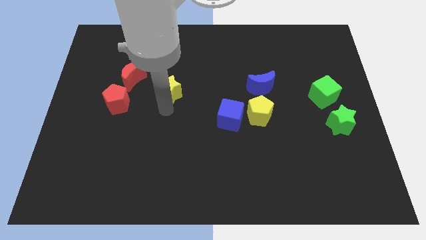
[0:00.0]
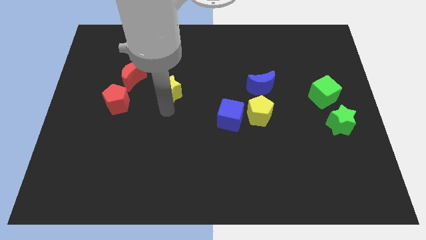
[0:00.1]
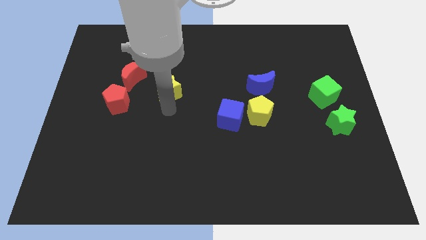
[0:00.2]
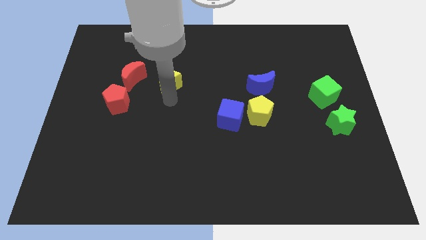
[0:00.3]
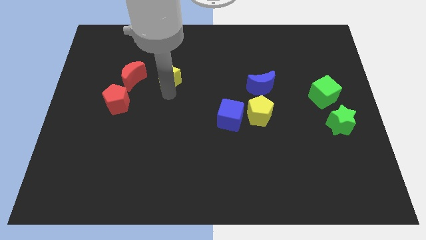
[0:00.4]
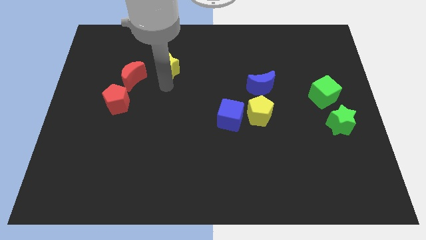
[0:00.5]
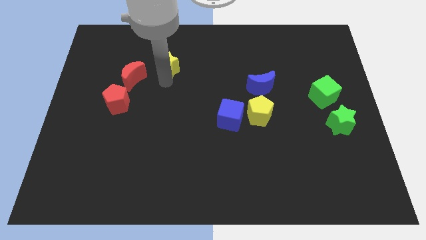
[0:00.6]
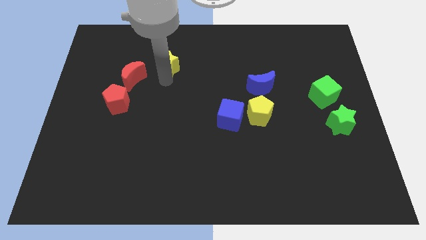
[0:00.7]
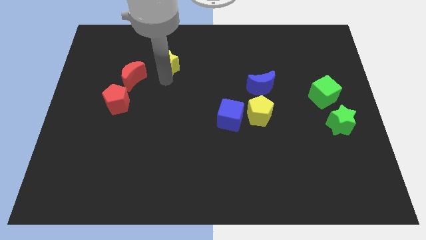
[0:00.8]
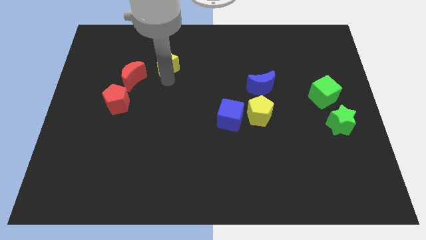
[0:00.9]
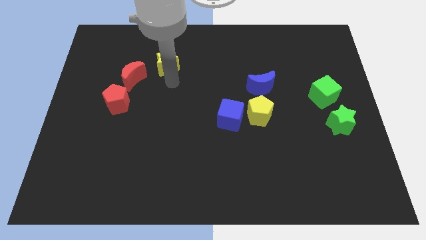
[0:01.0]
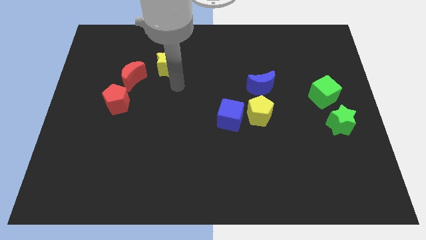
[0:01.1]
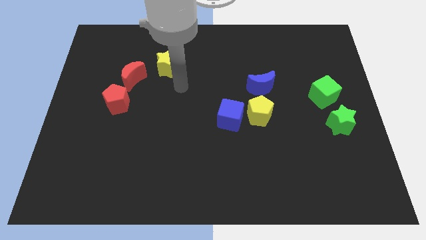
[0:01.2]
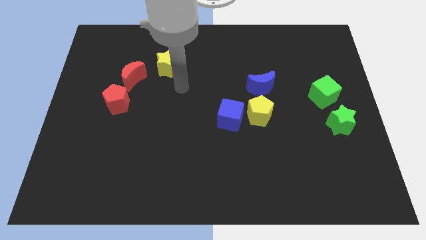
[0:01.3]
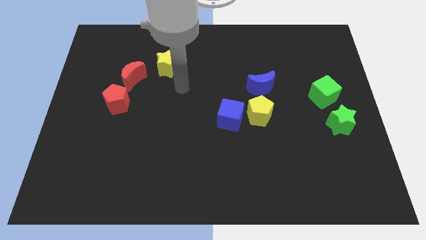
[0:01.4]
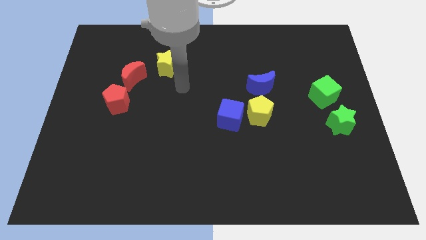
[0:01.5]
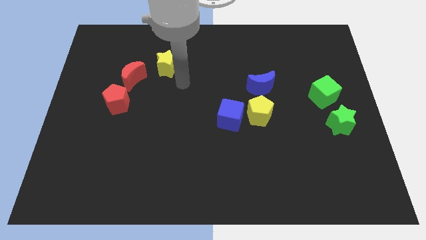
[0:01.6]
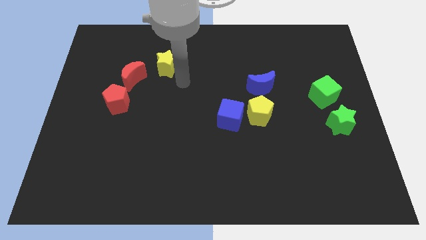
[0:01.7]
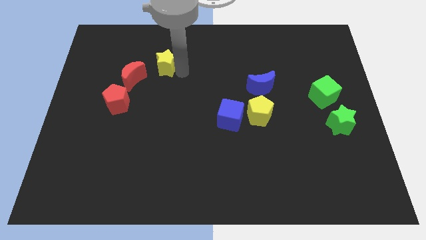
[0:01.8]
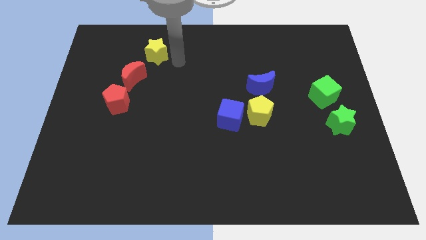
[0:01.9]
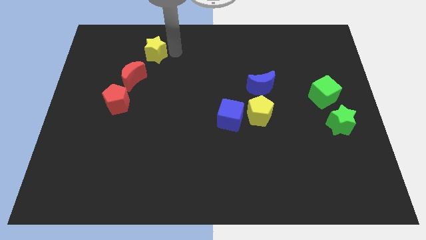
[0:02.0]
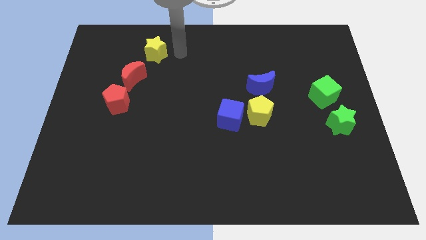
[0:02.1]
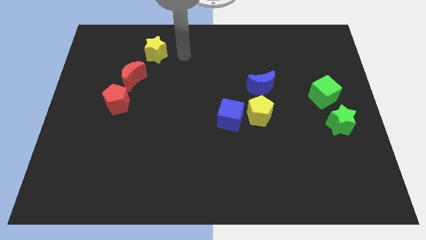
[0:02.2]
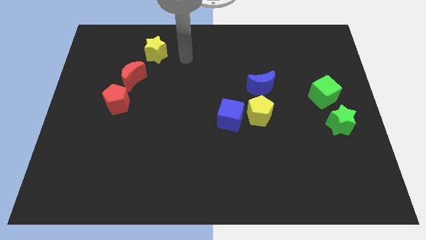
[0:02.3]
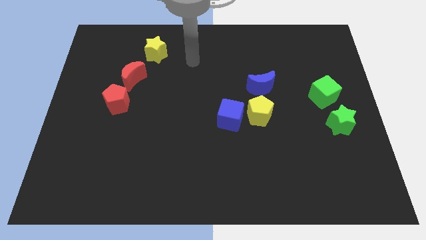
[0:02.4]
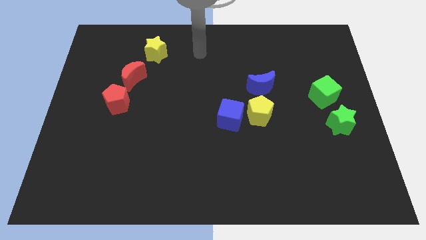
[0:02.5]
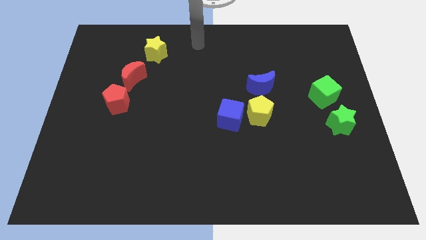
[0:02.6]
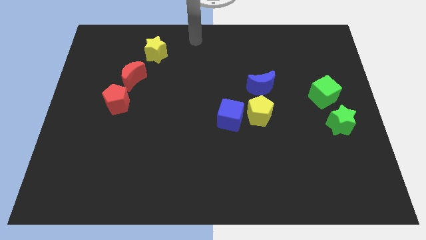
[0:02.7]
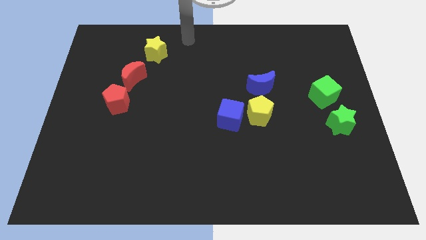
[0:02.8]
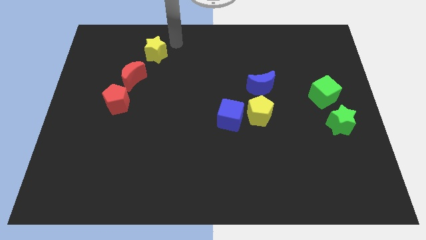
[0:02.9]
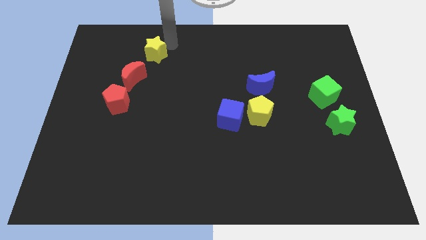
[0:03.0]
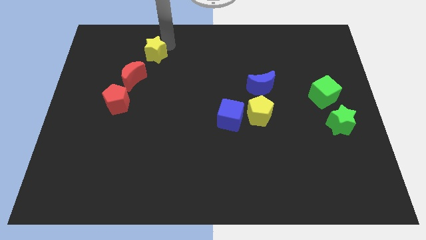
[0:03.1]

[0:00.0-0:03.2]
place the yellow star diagonal to the red moon

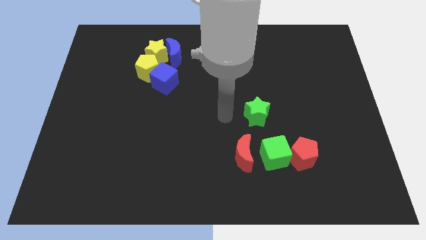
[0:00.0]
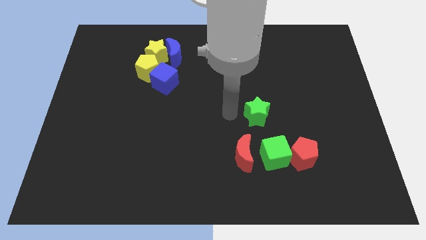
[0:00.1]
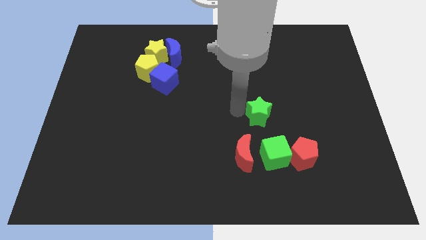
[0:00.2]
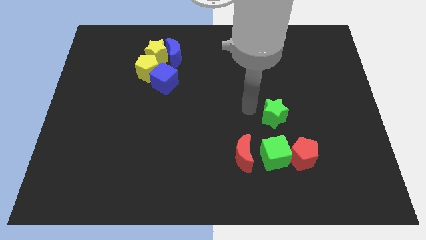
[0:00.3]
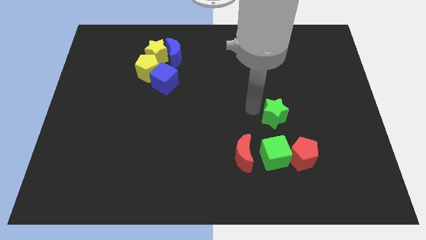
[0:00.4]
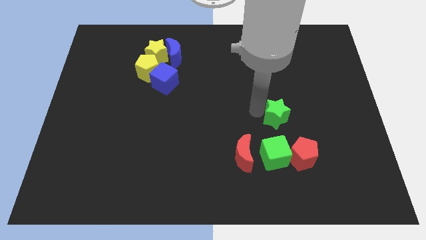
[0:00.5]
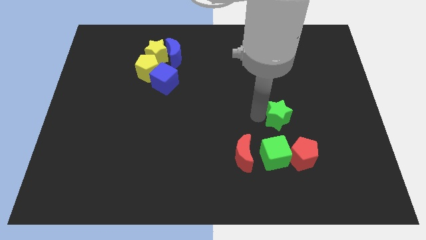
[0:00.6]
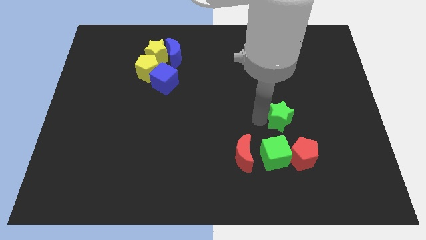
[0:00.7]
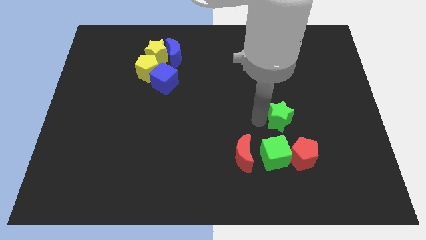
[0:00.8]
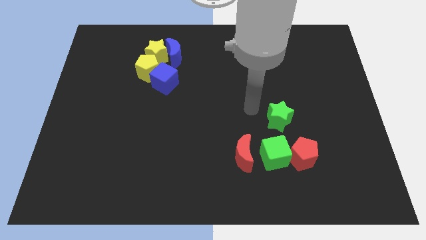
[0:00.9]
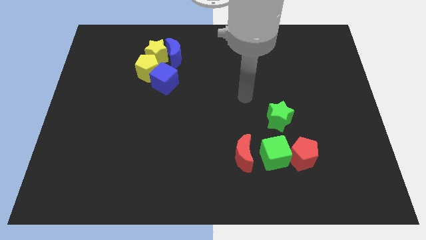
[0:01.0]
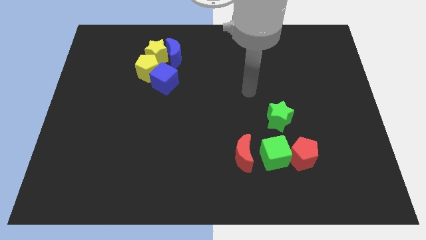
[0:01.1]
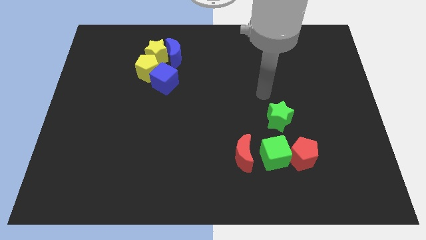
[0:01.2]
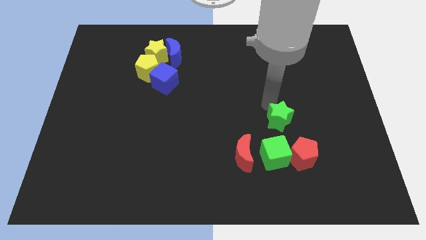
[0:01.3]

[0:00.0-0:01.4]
push the green star towards the green cube

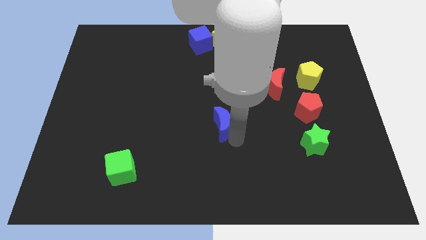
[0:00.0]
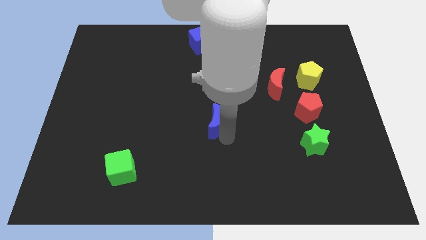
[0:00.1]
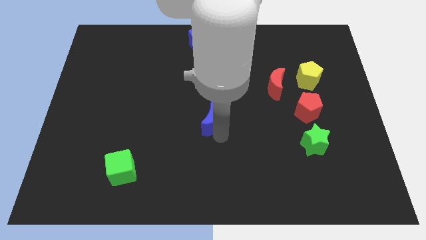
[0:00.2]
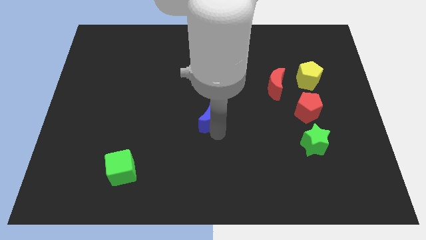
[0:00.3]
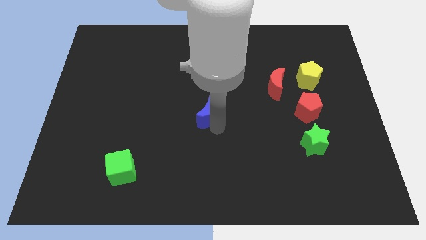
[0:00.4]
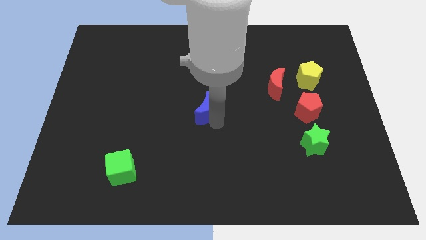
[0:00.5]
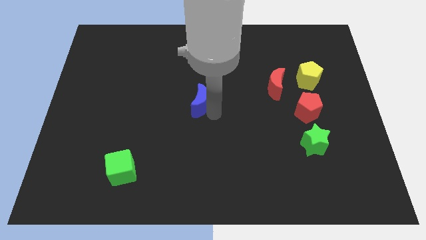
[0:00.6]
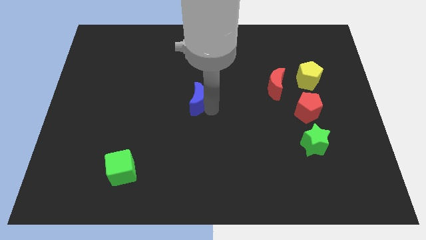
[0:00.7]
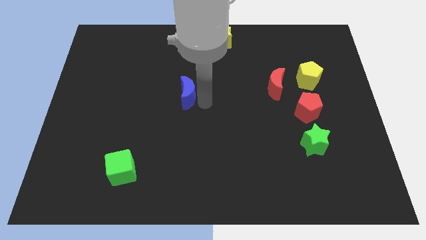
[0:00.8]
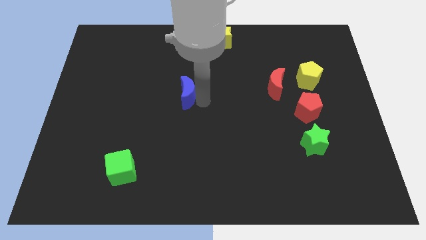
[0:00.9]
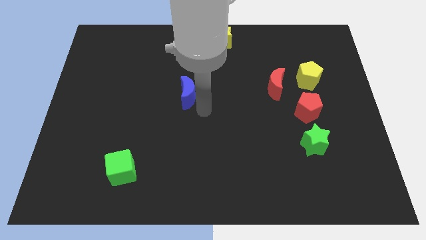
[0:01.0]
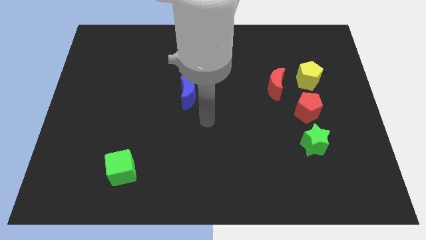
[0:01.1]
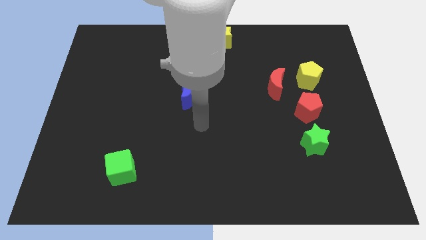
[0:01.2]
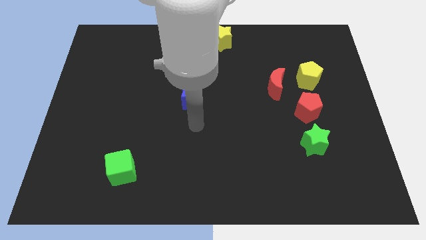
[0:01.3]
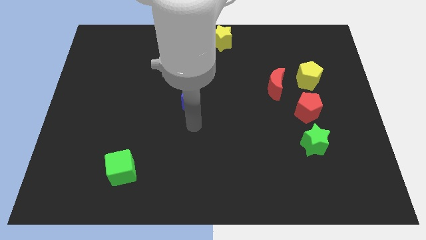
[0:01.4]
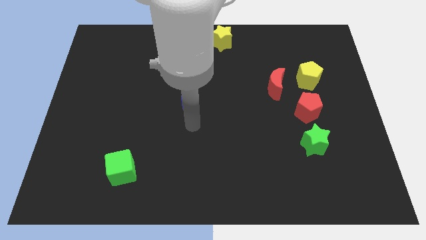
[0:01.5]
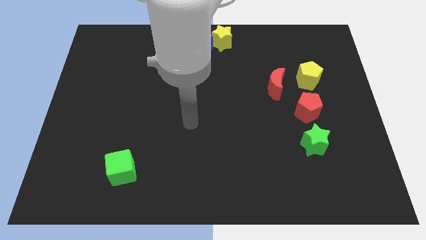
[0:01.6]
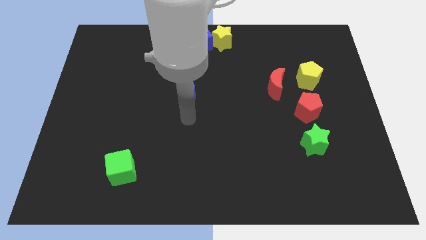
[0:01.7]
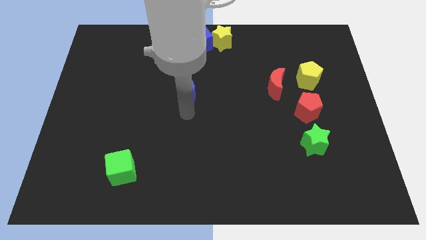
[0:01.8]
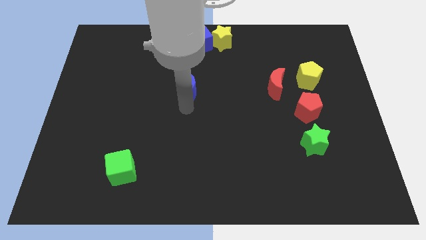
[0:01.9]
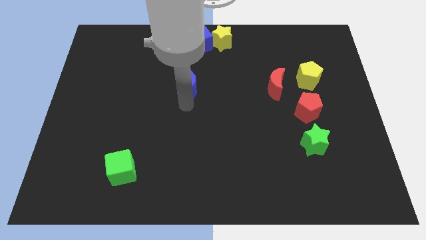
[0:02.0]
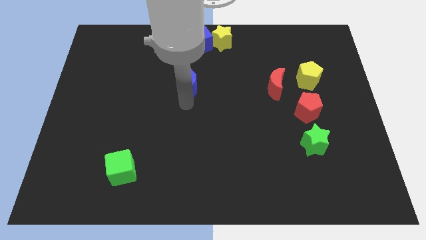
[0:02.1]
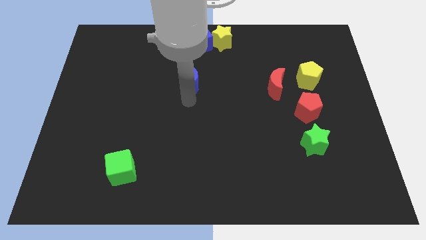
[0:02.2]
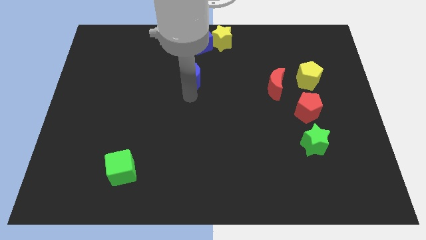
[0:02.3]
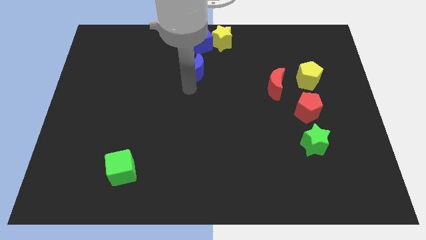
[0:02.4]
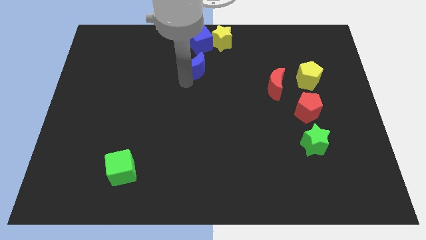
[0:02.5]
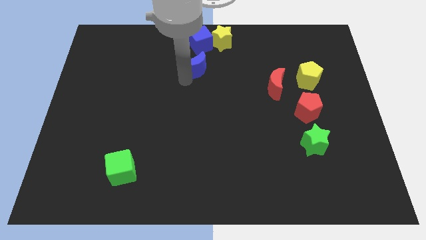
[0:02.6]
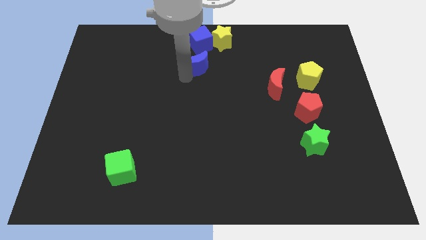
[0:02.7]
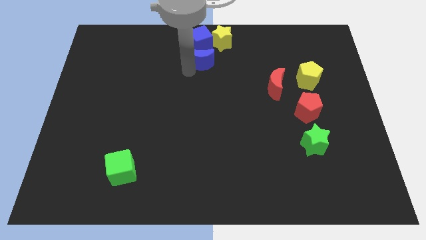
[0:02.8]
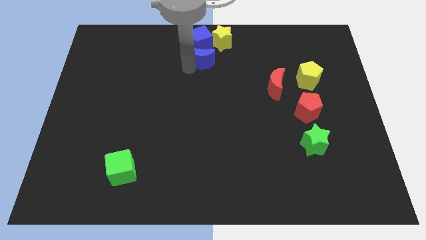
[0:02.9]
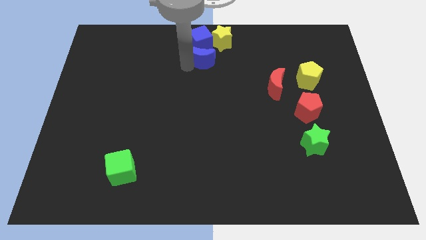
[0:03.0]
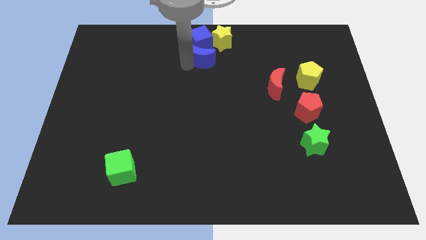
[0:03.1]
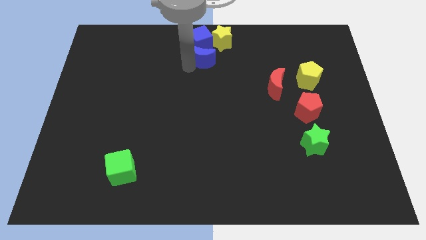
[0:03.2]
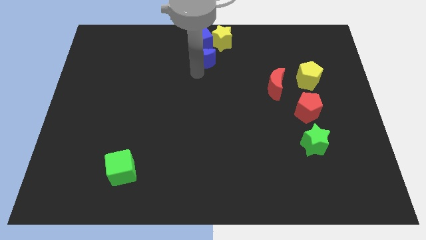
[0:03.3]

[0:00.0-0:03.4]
push the blue moon to the bottom of the blue cube

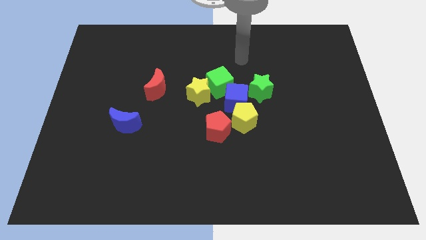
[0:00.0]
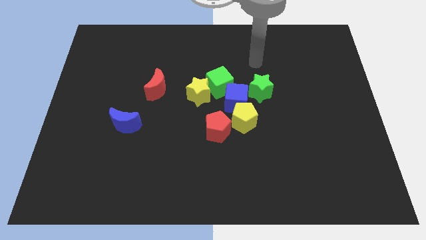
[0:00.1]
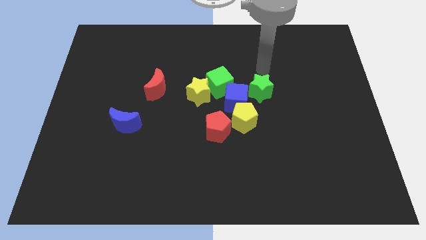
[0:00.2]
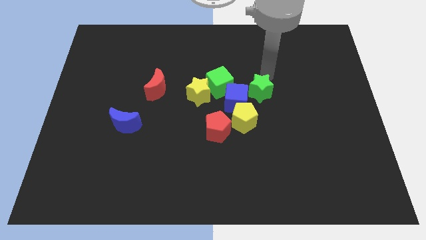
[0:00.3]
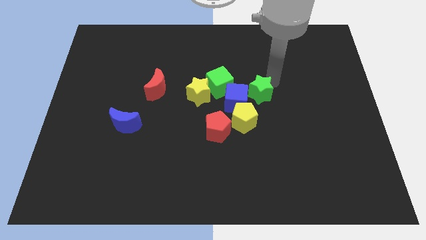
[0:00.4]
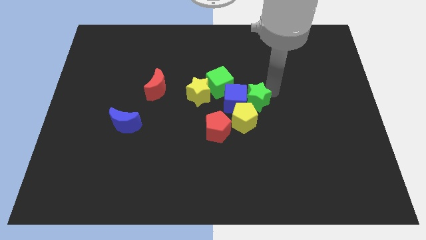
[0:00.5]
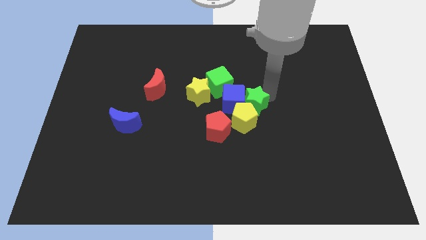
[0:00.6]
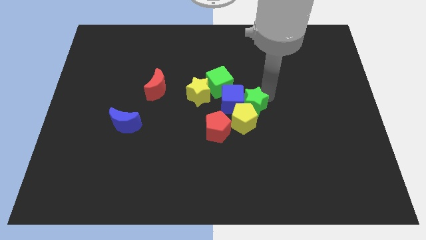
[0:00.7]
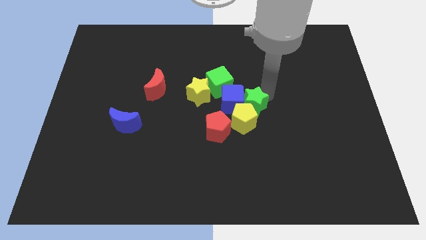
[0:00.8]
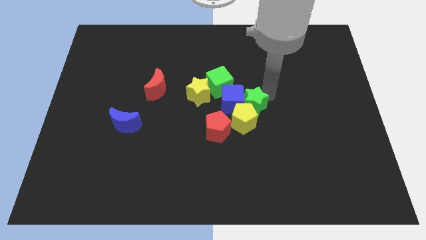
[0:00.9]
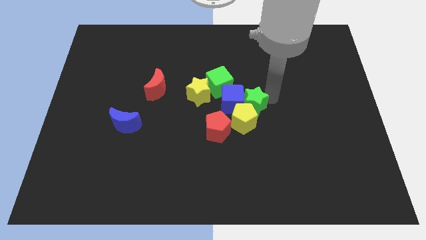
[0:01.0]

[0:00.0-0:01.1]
push the green star into the yellow pentagon
